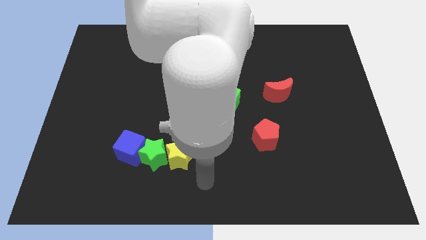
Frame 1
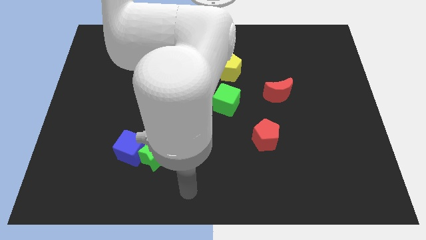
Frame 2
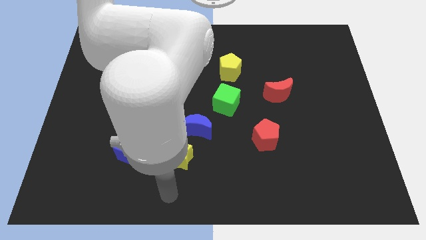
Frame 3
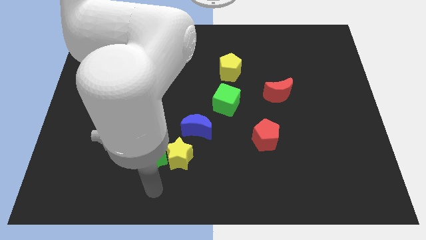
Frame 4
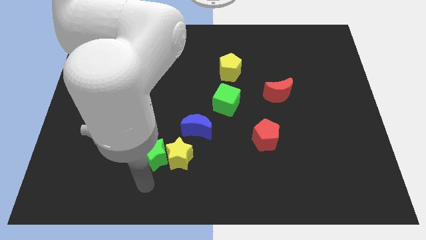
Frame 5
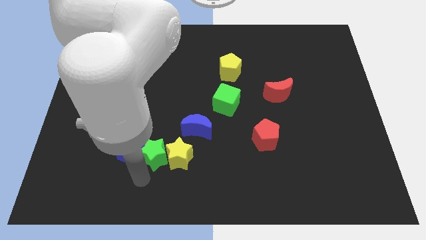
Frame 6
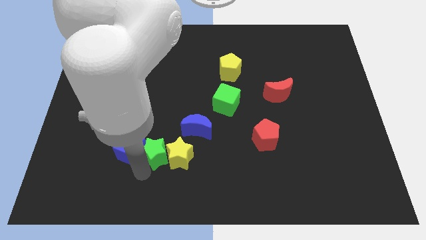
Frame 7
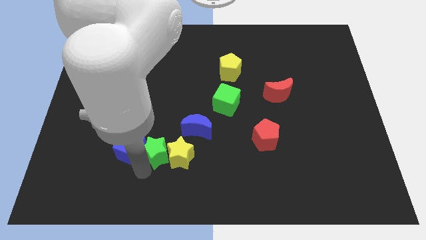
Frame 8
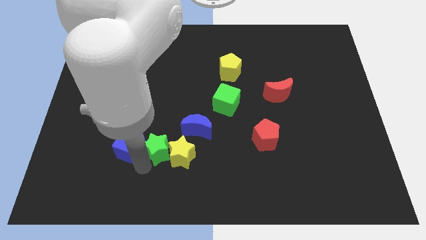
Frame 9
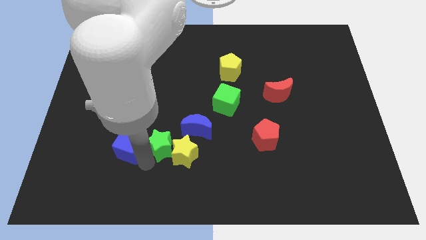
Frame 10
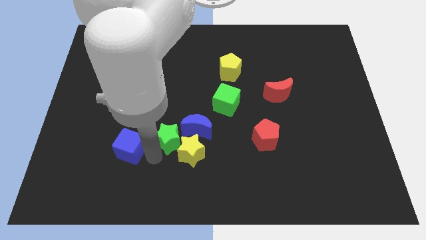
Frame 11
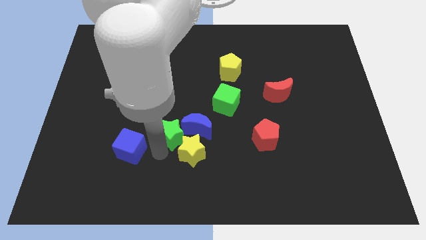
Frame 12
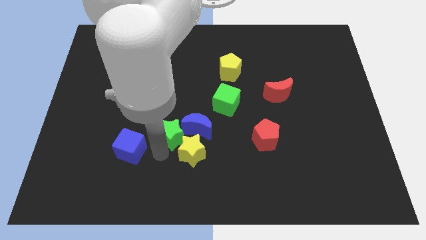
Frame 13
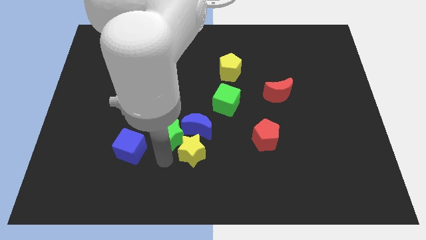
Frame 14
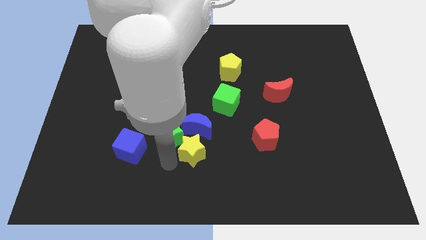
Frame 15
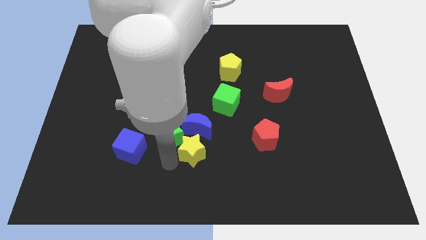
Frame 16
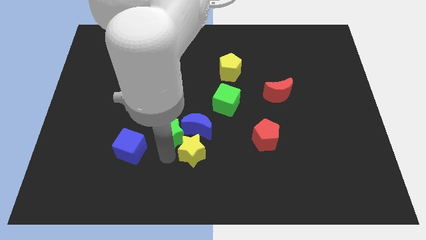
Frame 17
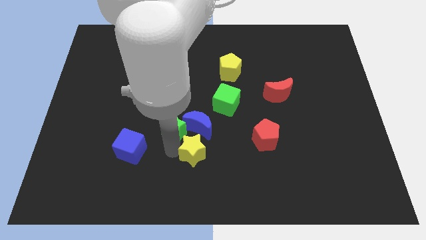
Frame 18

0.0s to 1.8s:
place the green star to the top left of the yellow star

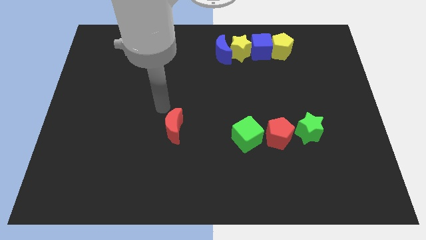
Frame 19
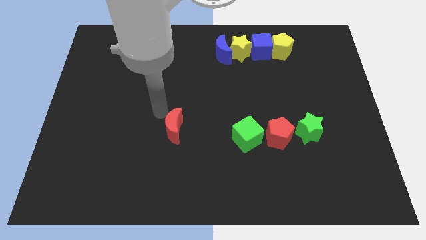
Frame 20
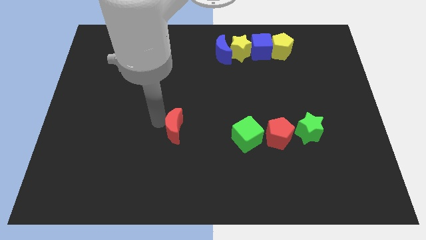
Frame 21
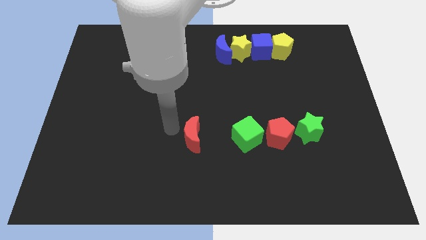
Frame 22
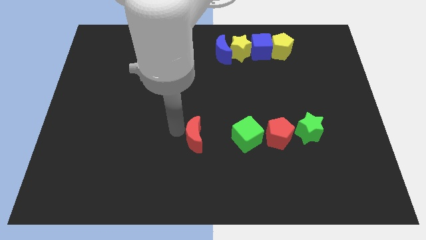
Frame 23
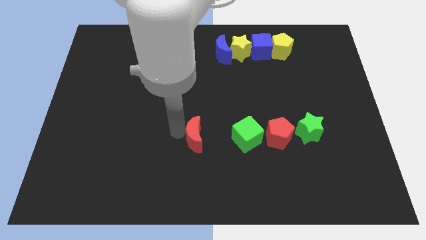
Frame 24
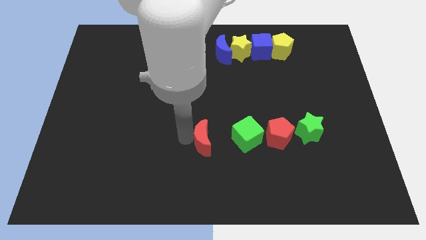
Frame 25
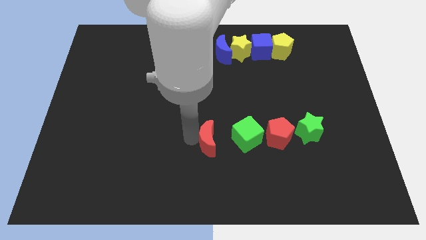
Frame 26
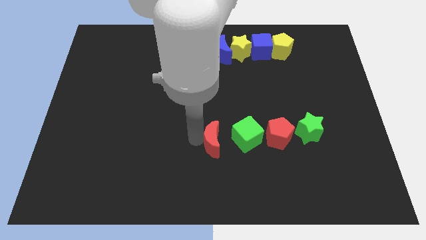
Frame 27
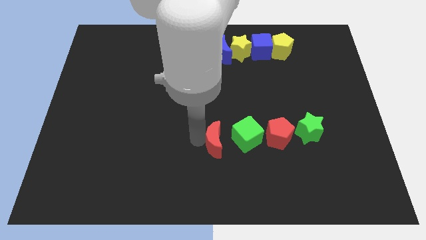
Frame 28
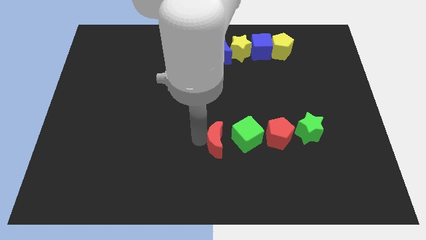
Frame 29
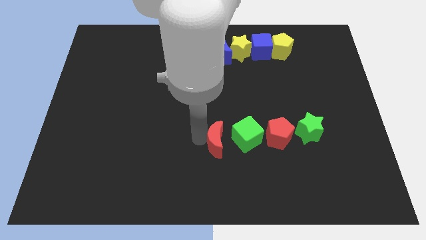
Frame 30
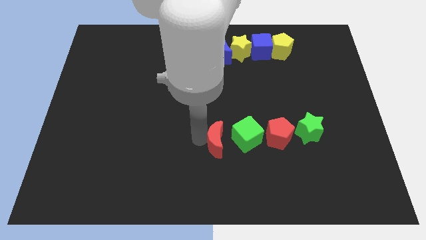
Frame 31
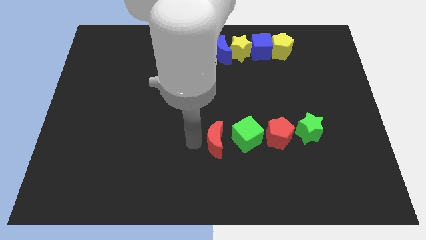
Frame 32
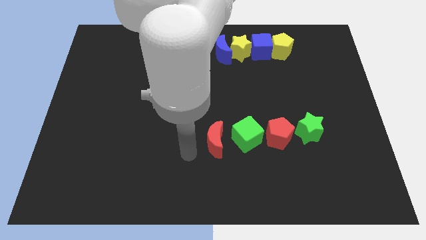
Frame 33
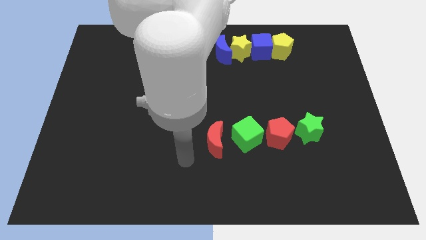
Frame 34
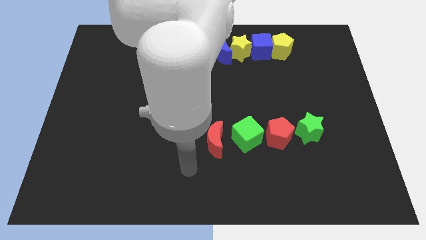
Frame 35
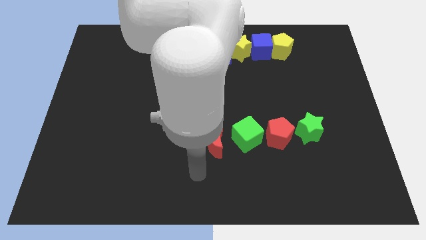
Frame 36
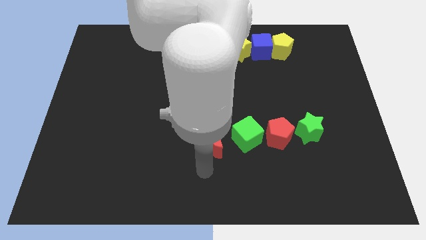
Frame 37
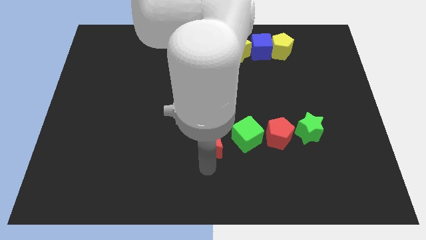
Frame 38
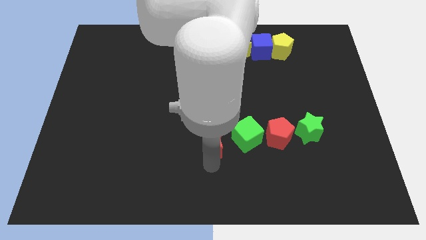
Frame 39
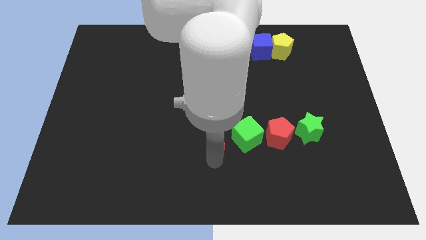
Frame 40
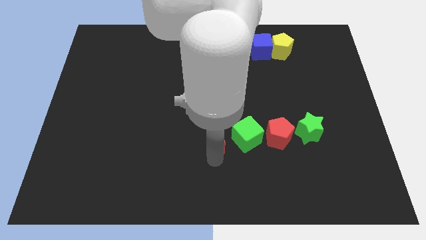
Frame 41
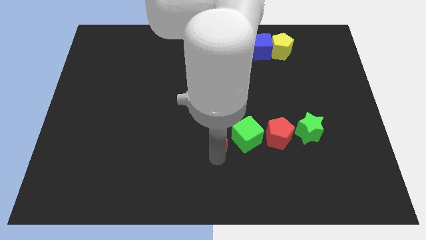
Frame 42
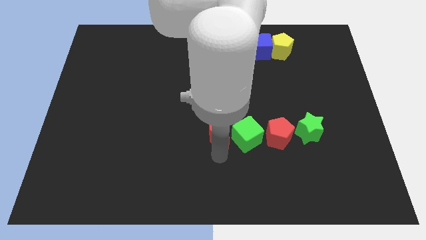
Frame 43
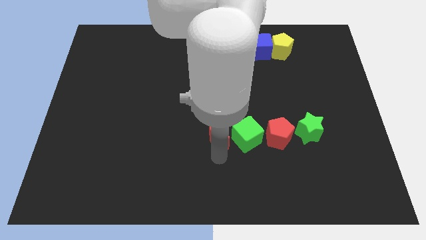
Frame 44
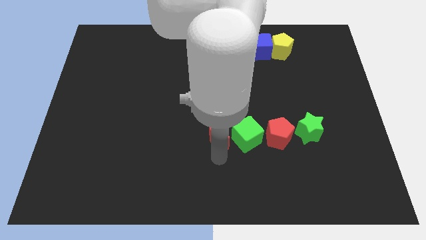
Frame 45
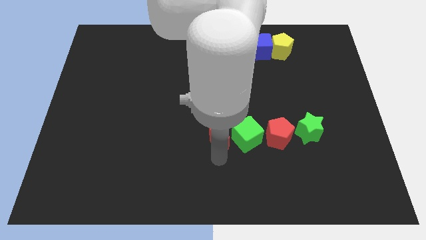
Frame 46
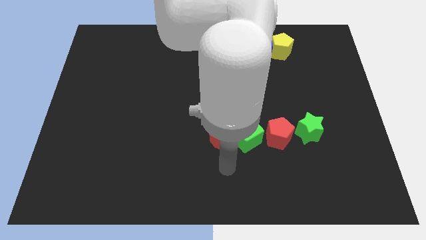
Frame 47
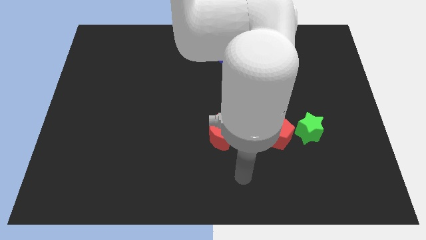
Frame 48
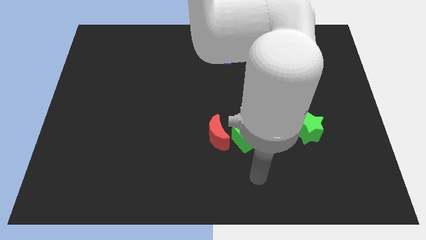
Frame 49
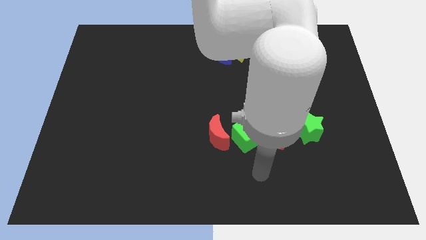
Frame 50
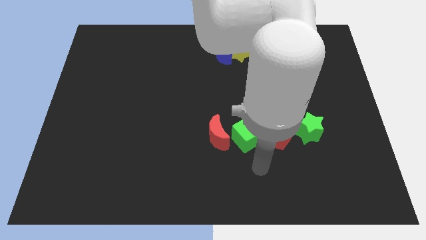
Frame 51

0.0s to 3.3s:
move the red crescent left to the green cube

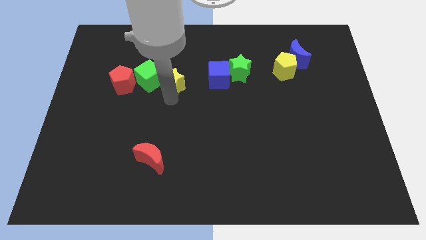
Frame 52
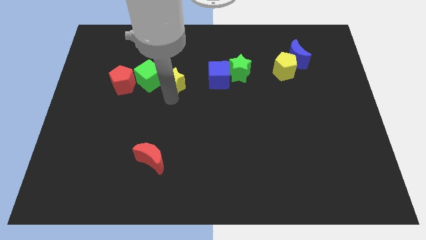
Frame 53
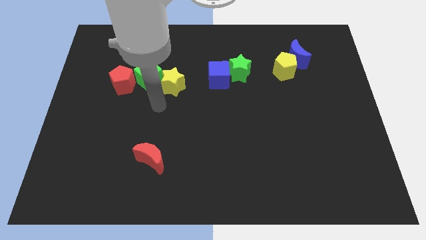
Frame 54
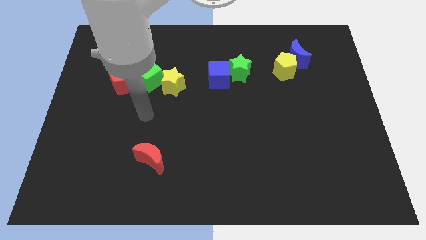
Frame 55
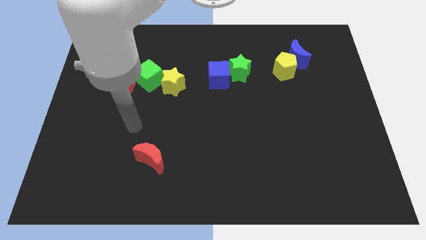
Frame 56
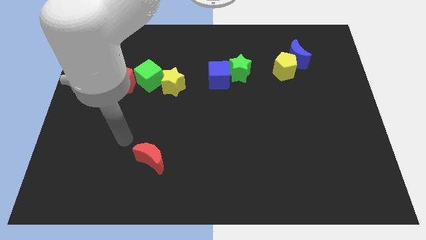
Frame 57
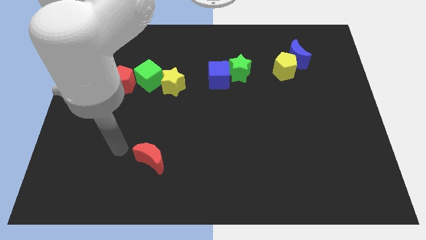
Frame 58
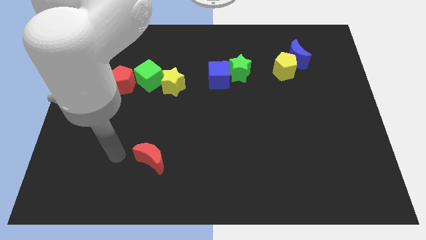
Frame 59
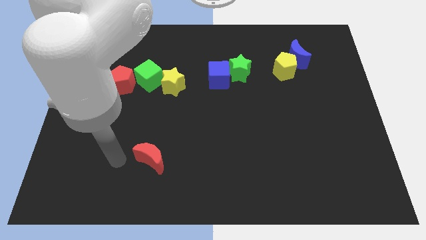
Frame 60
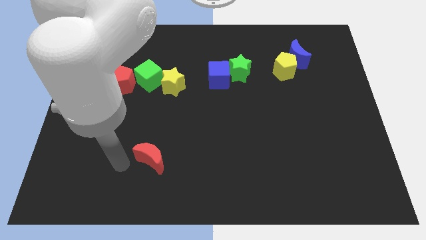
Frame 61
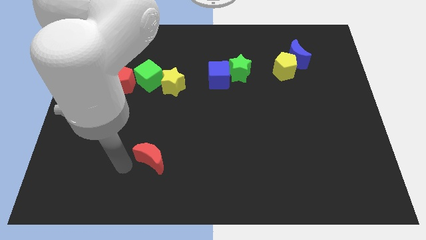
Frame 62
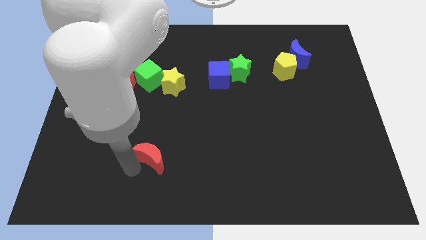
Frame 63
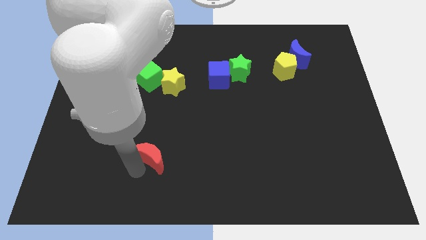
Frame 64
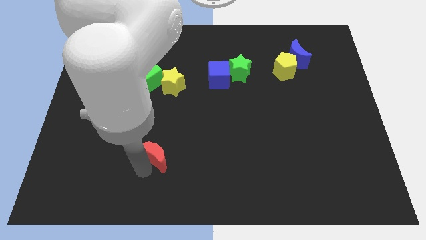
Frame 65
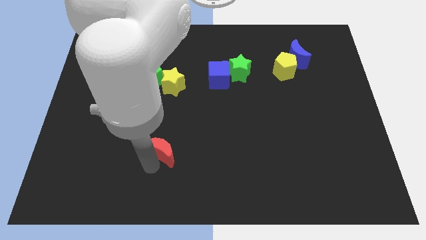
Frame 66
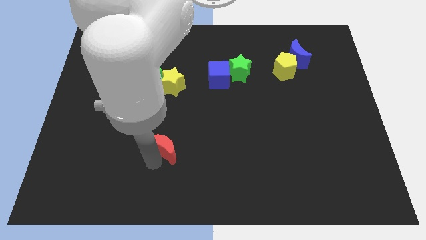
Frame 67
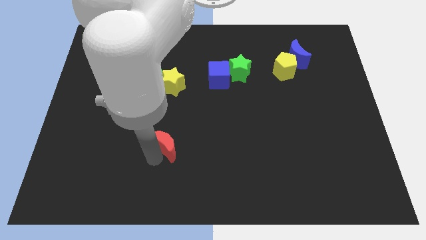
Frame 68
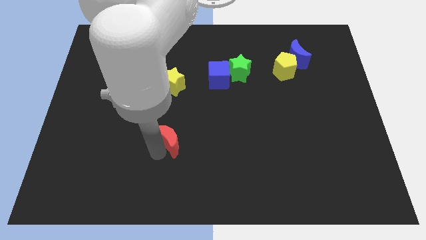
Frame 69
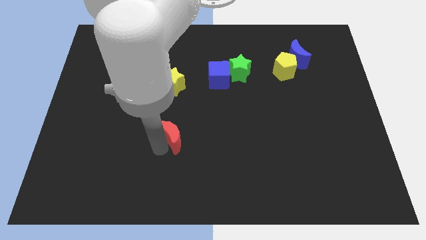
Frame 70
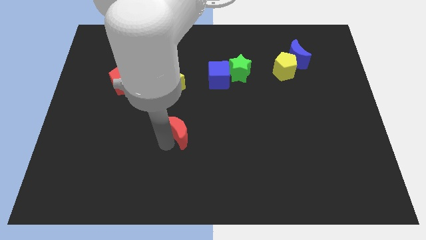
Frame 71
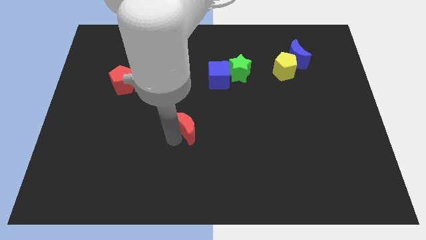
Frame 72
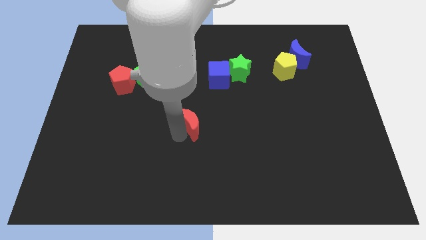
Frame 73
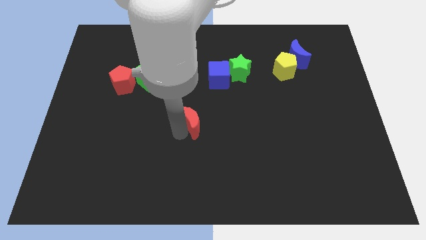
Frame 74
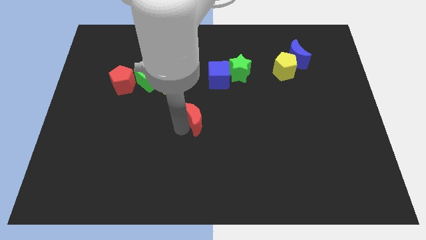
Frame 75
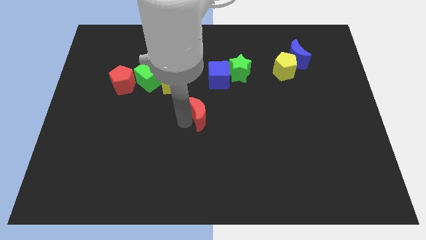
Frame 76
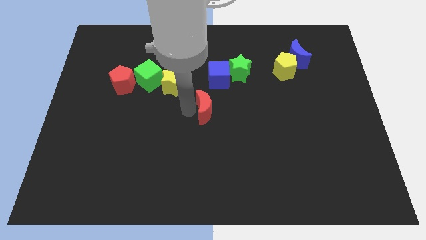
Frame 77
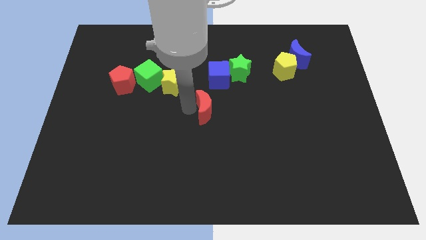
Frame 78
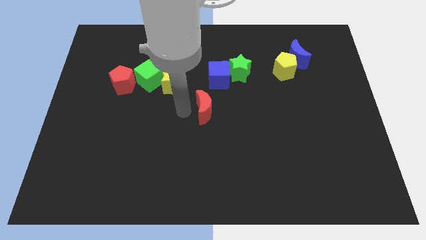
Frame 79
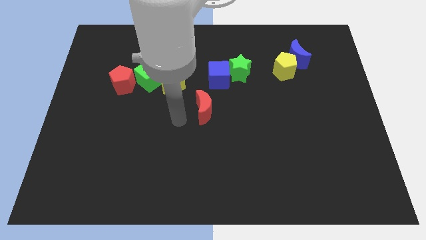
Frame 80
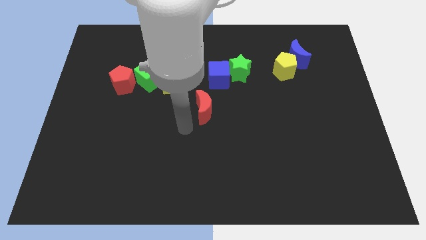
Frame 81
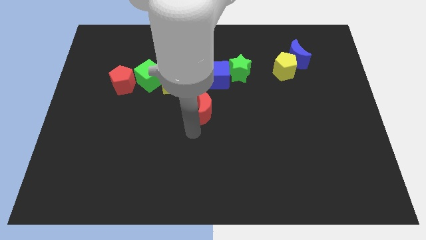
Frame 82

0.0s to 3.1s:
slide the red crescent diagonally bottom right to the yellow star

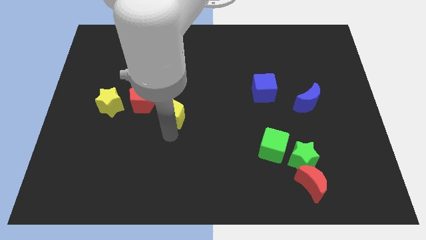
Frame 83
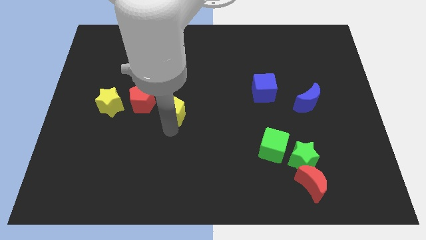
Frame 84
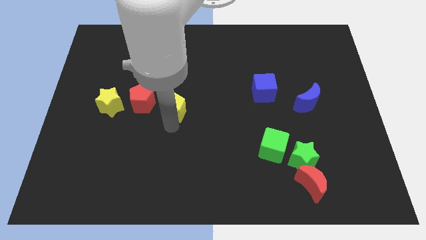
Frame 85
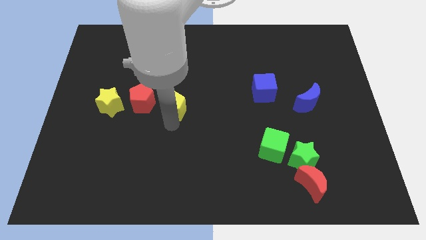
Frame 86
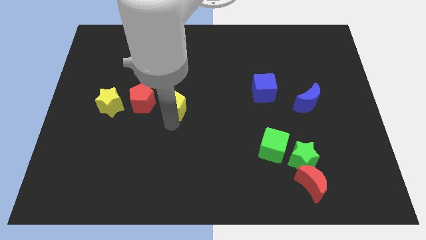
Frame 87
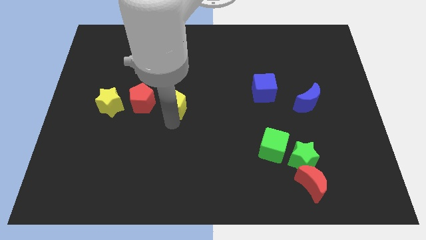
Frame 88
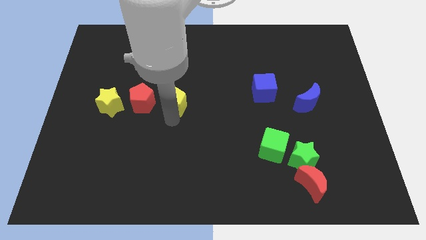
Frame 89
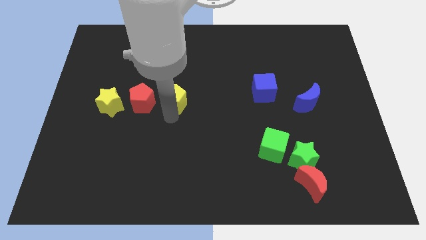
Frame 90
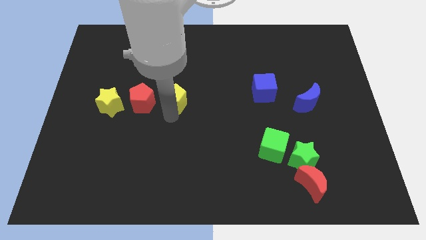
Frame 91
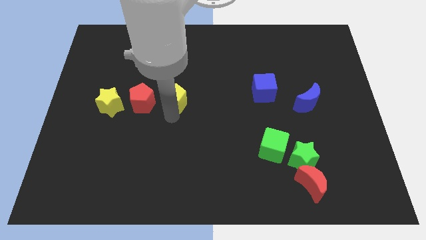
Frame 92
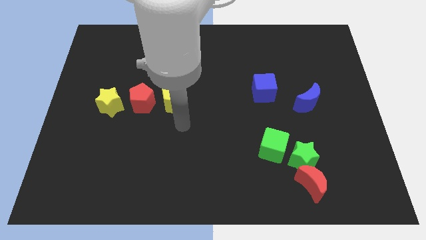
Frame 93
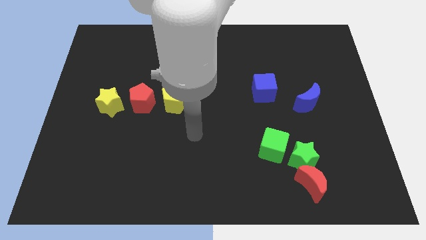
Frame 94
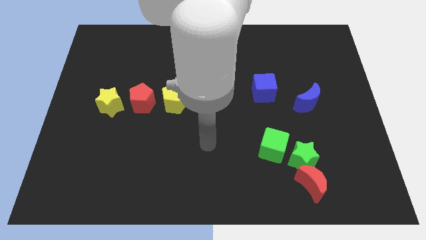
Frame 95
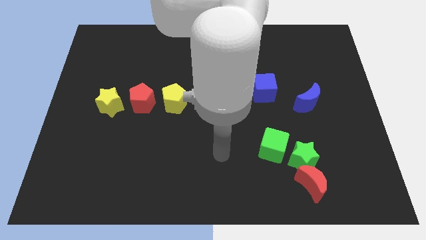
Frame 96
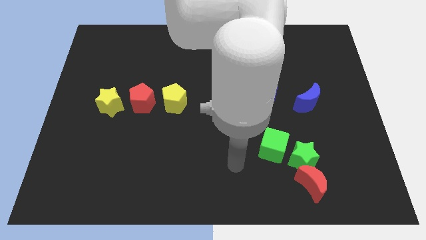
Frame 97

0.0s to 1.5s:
place the yellow pentagon right side of the red penatgon
